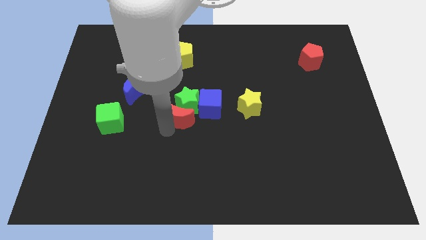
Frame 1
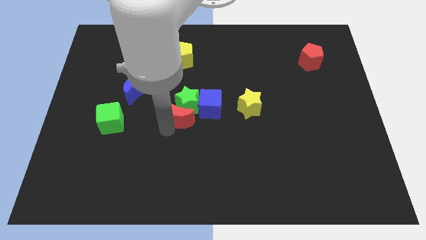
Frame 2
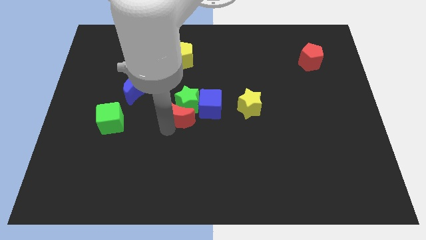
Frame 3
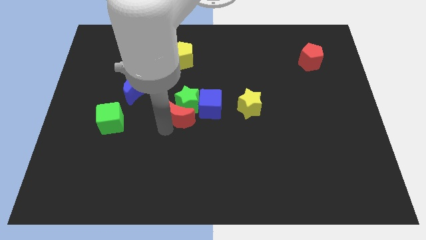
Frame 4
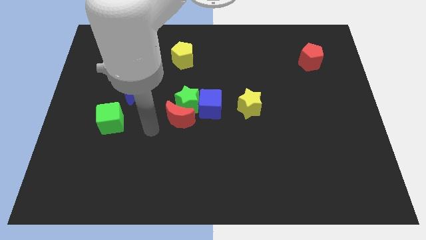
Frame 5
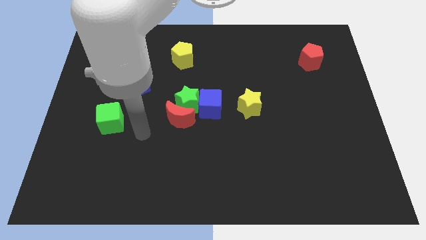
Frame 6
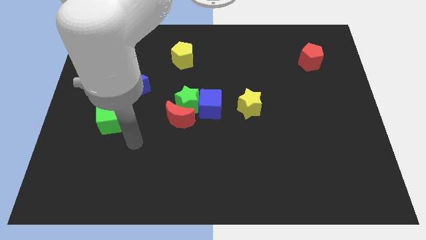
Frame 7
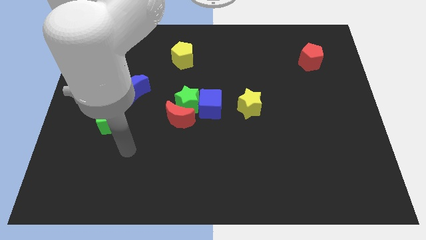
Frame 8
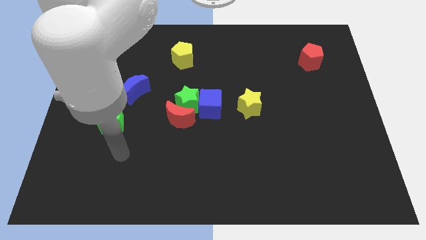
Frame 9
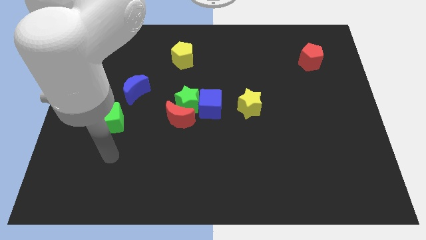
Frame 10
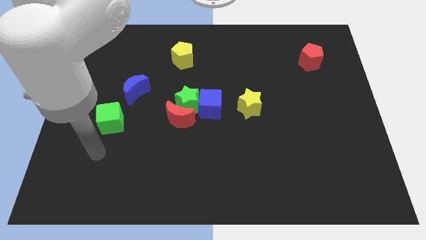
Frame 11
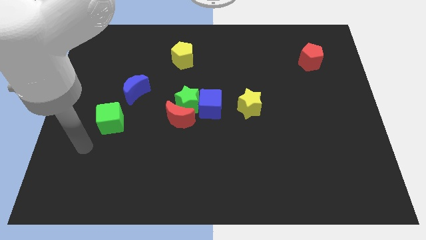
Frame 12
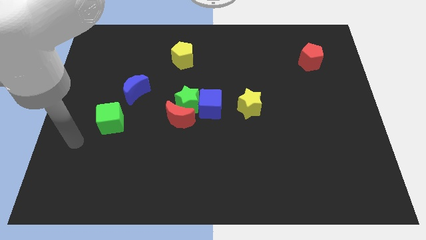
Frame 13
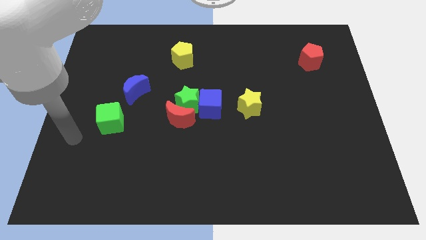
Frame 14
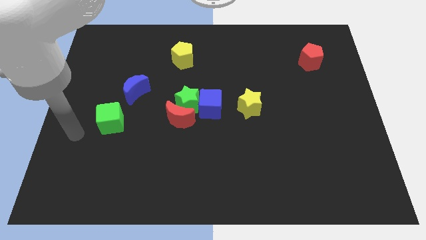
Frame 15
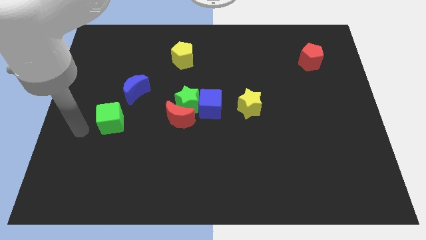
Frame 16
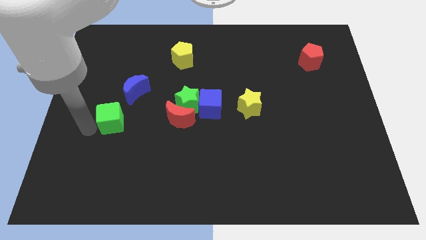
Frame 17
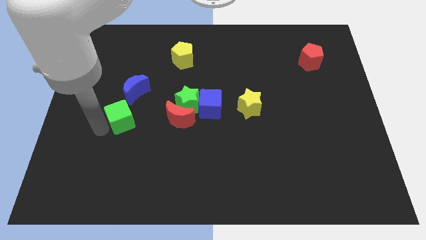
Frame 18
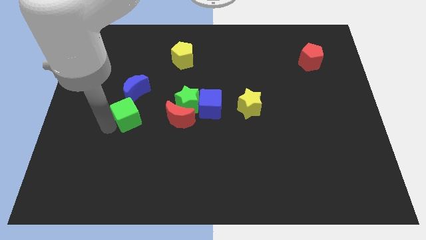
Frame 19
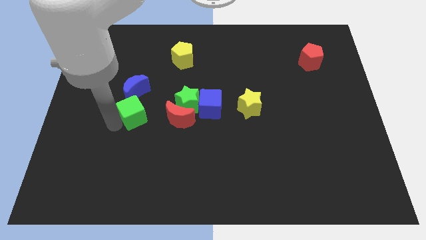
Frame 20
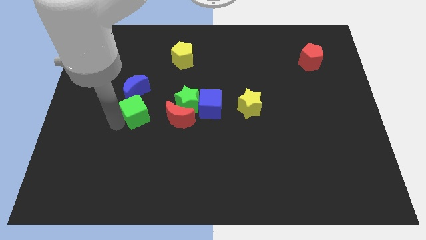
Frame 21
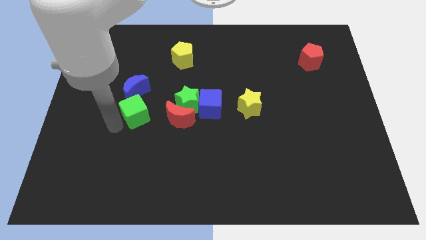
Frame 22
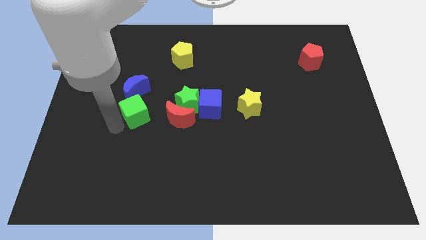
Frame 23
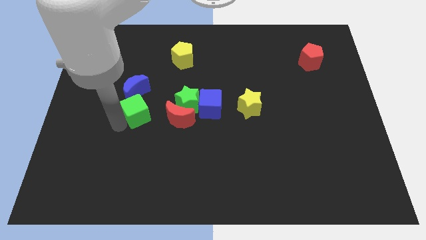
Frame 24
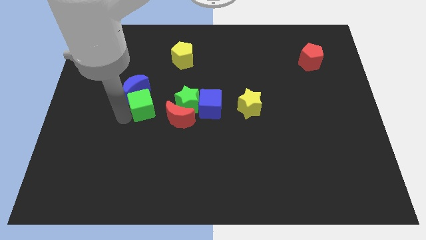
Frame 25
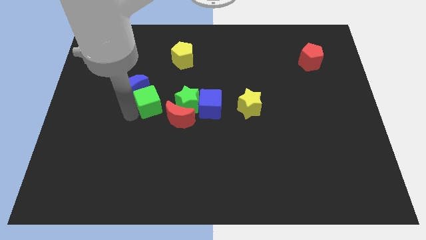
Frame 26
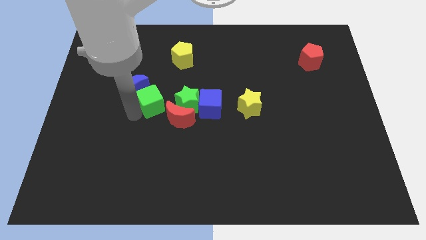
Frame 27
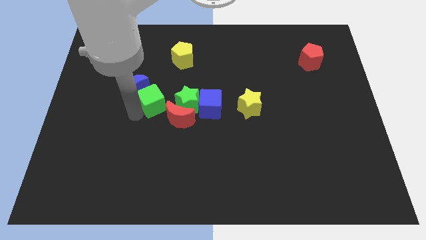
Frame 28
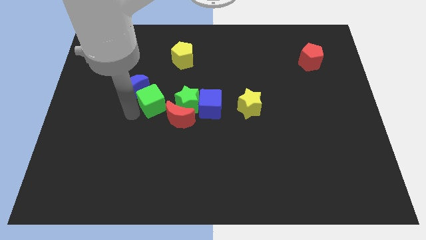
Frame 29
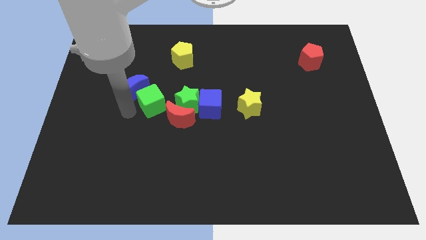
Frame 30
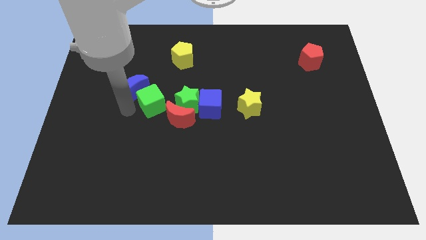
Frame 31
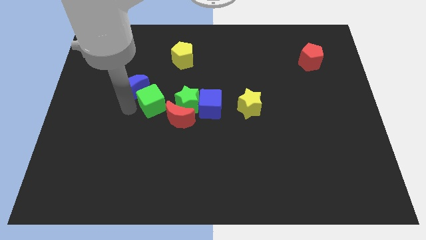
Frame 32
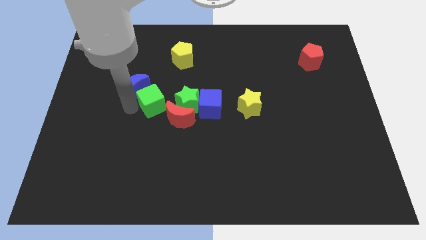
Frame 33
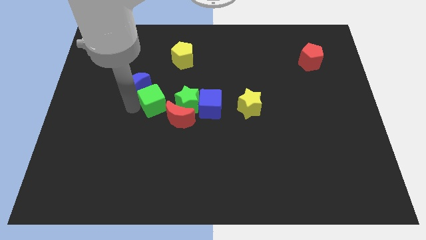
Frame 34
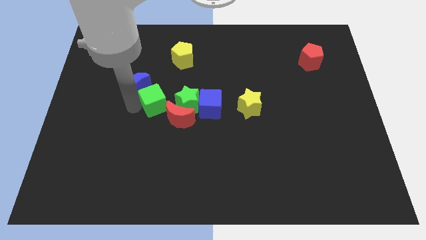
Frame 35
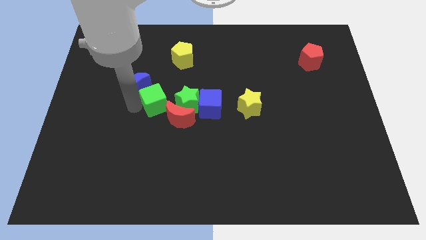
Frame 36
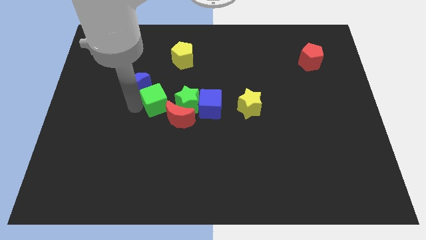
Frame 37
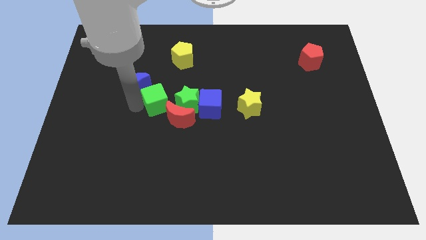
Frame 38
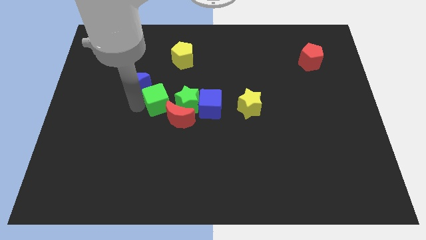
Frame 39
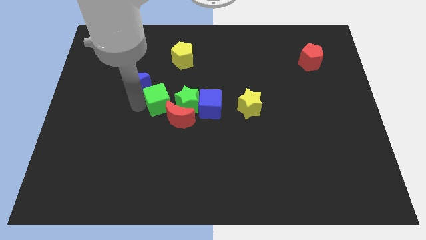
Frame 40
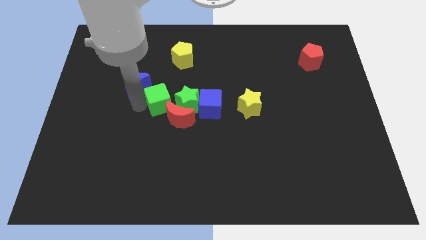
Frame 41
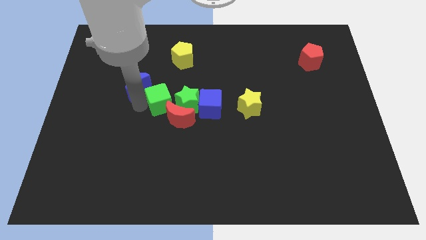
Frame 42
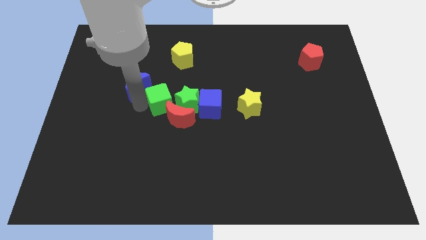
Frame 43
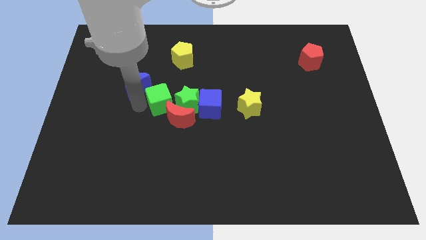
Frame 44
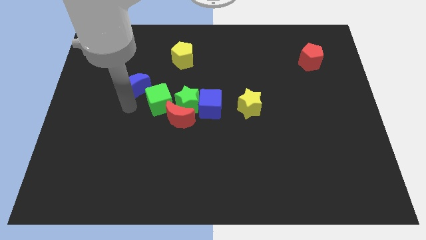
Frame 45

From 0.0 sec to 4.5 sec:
move the green cube to the left of the green star

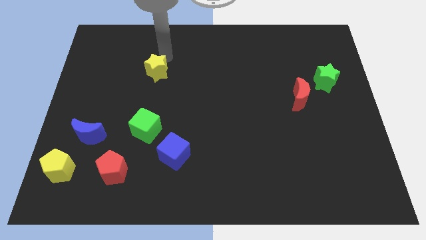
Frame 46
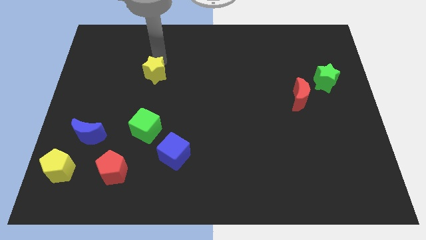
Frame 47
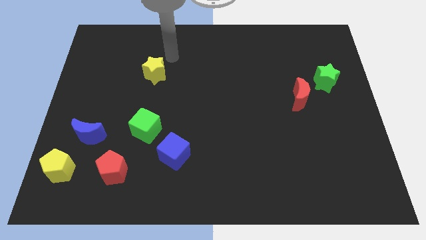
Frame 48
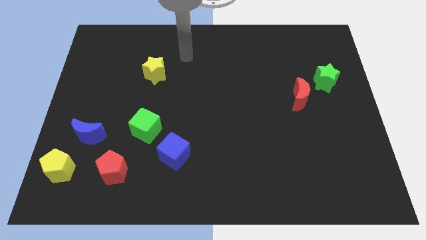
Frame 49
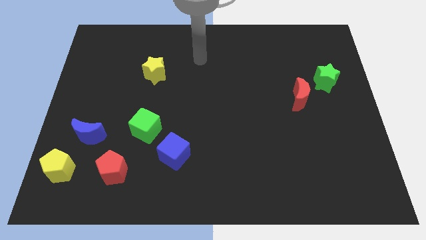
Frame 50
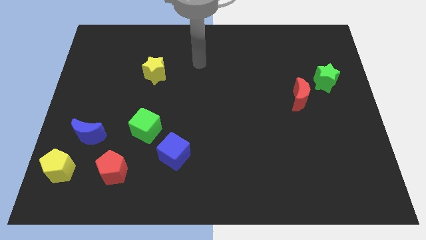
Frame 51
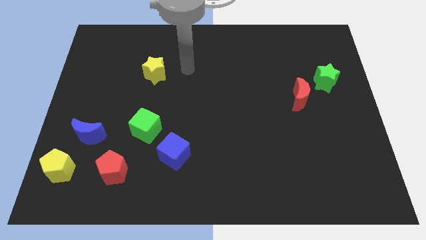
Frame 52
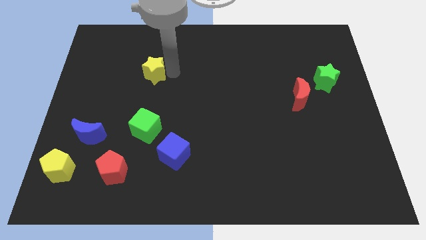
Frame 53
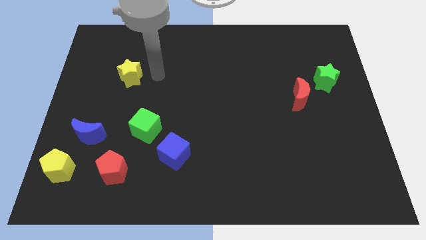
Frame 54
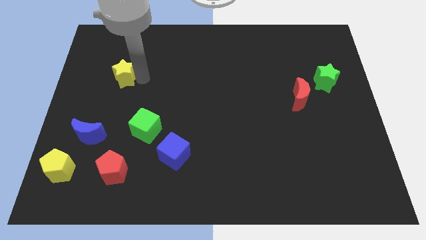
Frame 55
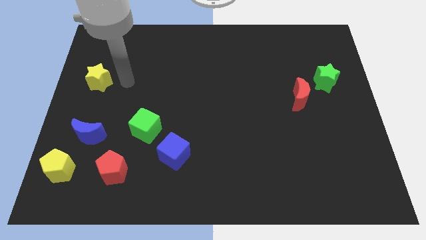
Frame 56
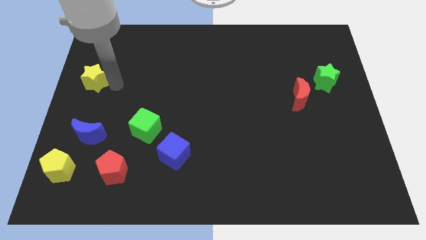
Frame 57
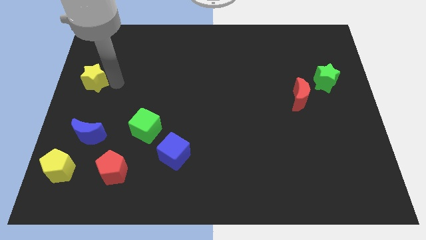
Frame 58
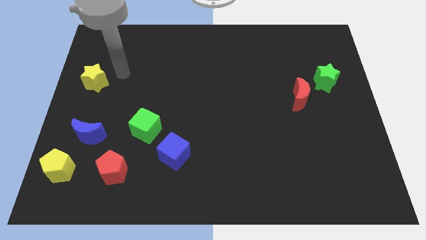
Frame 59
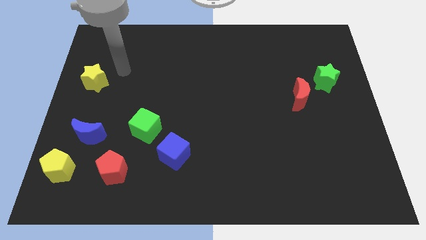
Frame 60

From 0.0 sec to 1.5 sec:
place the yellow star above the blue moon

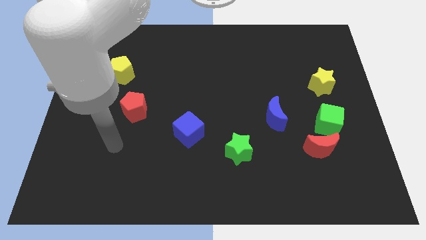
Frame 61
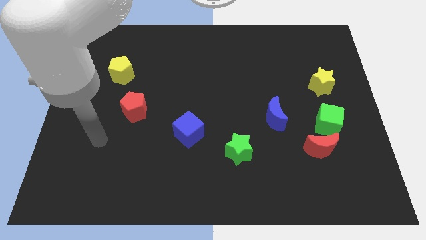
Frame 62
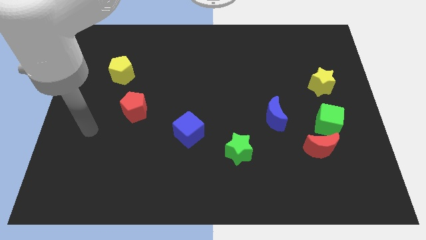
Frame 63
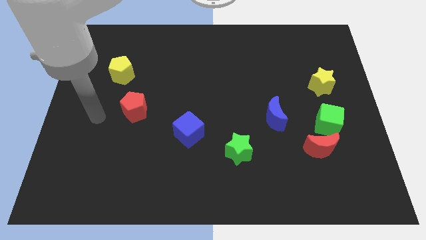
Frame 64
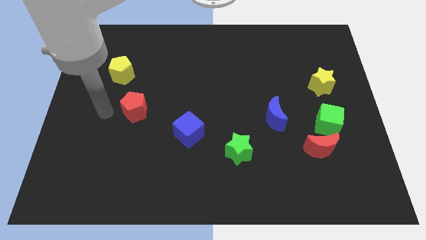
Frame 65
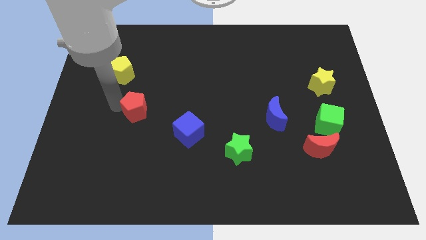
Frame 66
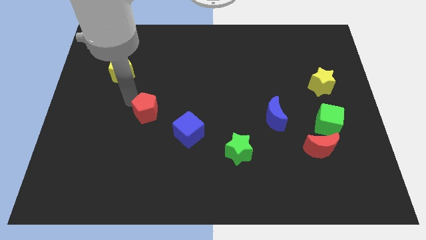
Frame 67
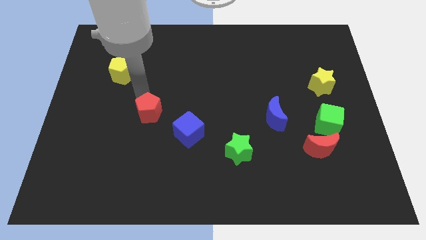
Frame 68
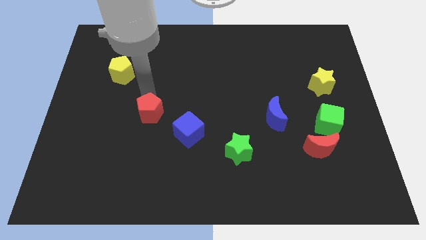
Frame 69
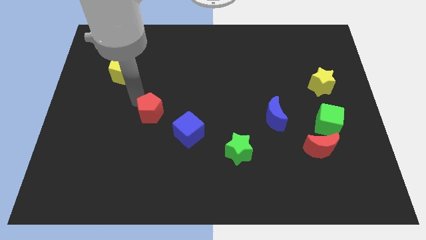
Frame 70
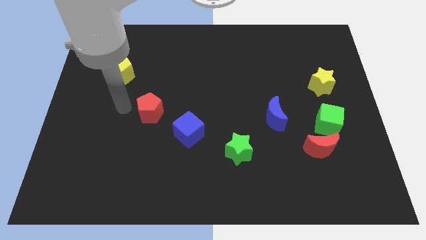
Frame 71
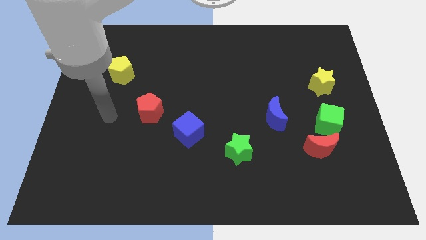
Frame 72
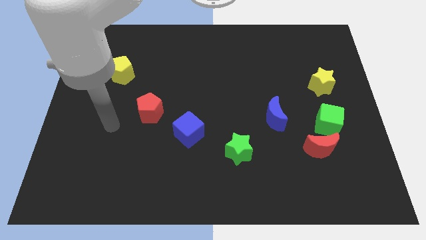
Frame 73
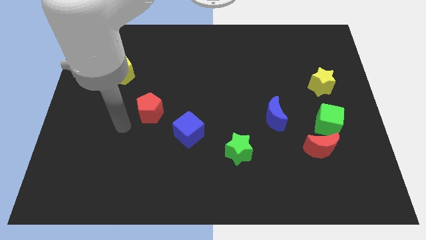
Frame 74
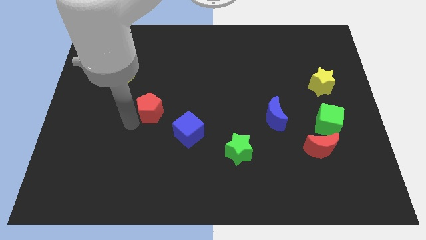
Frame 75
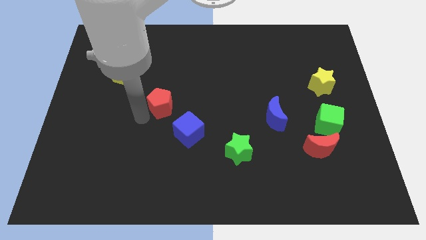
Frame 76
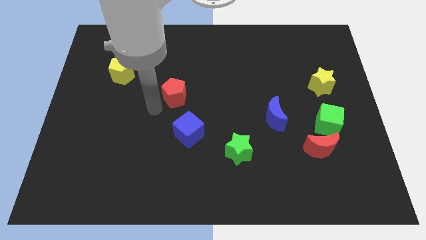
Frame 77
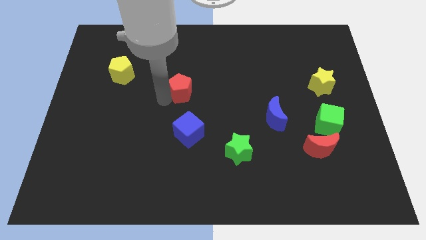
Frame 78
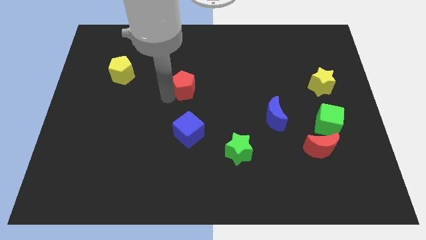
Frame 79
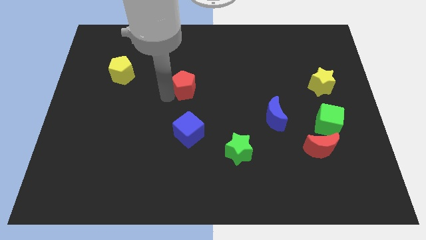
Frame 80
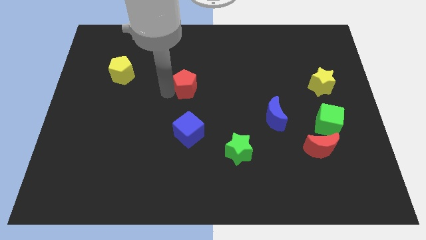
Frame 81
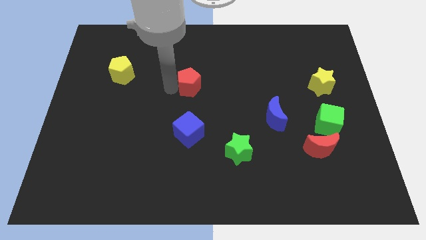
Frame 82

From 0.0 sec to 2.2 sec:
move the red pentagon above the blue cube

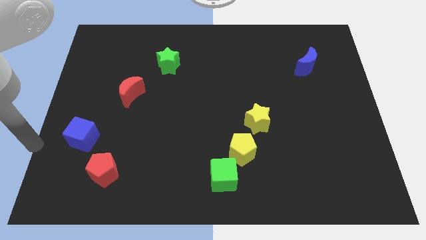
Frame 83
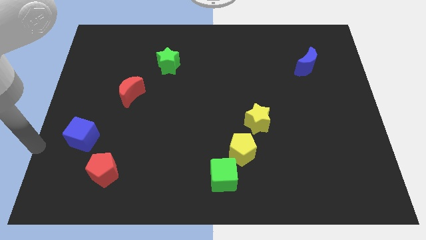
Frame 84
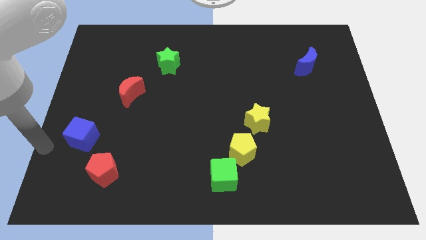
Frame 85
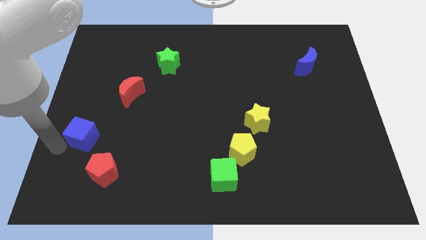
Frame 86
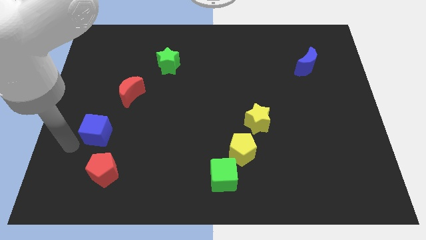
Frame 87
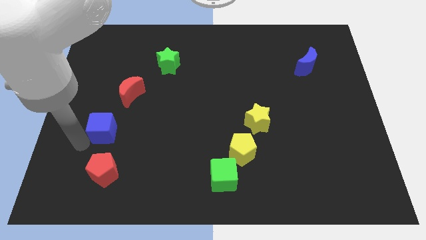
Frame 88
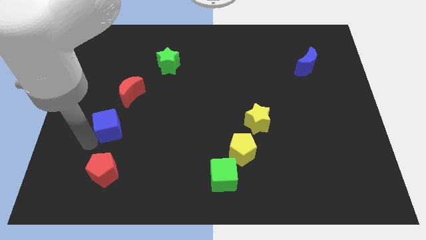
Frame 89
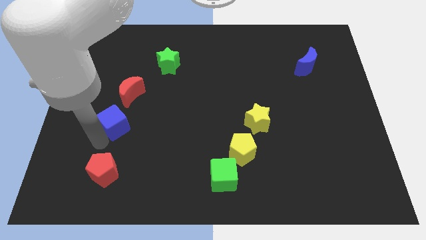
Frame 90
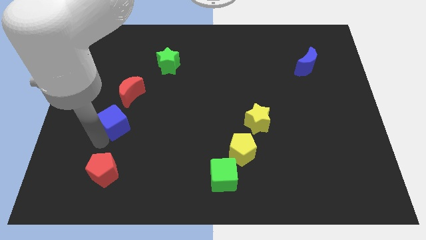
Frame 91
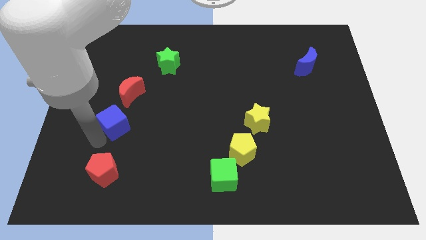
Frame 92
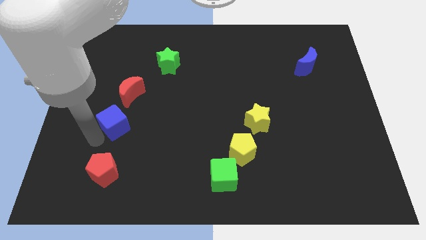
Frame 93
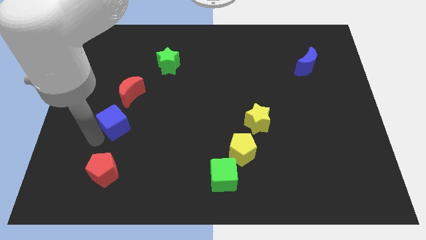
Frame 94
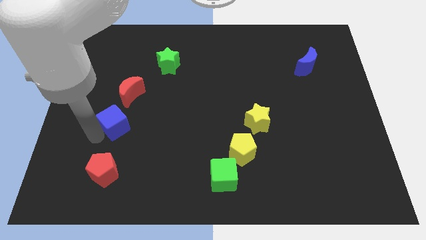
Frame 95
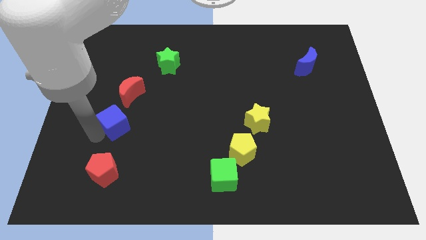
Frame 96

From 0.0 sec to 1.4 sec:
slightly move the blue cube towards the right
